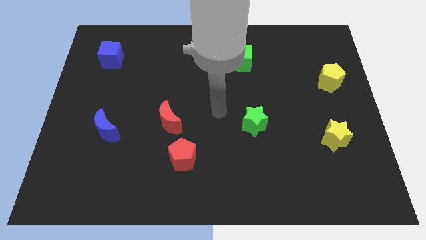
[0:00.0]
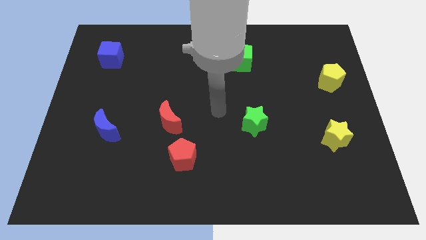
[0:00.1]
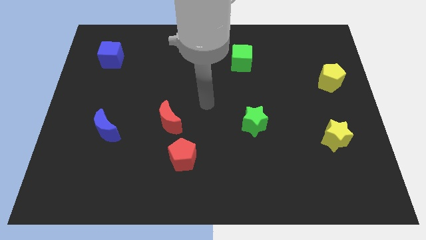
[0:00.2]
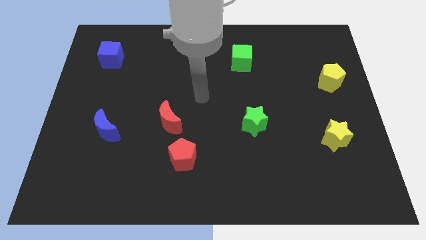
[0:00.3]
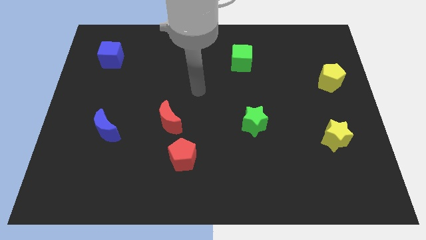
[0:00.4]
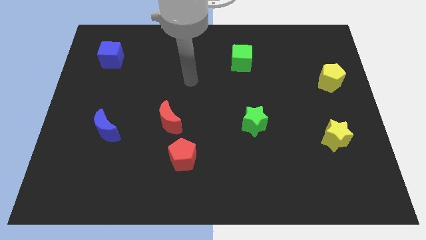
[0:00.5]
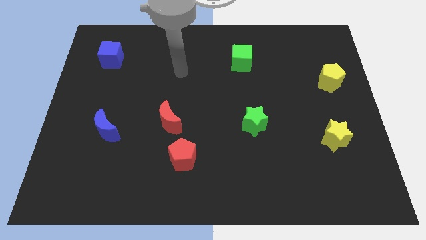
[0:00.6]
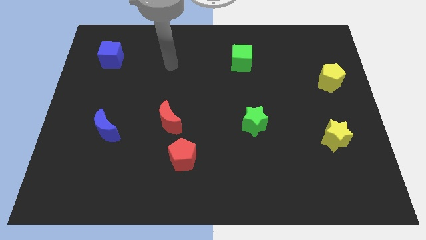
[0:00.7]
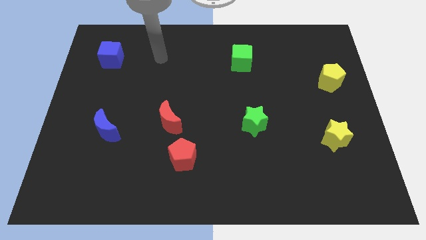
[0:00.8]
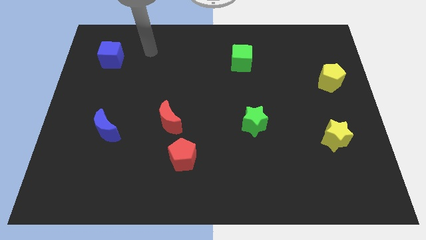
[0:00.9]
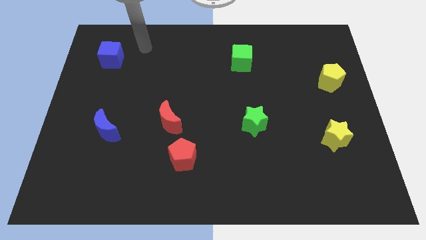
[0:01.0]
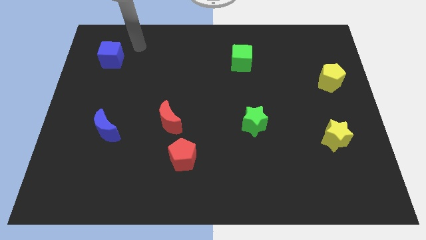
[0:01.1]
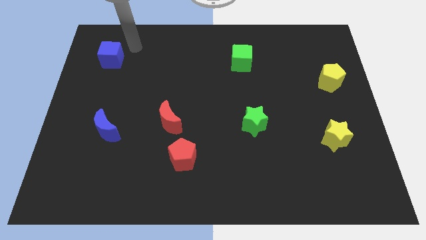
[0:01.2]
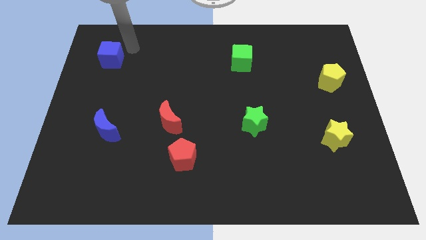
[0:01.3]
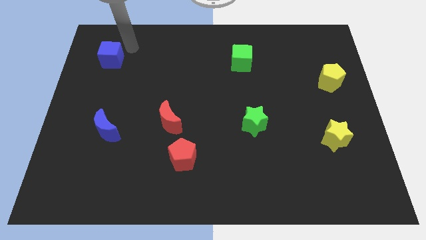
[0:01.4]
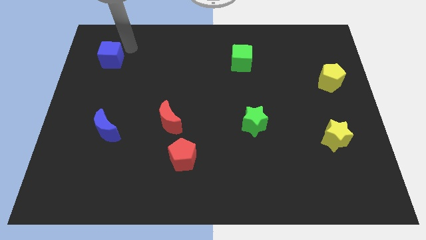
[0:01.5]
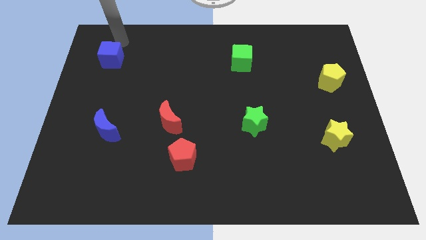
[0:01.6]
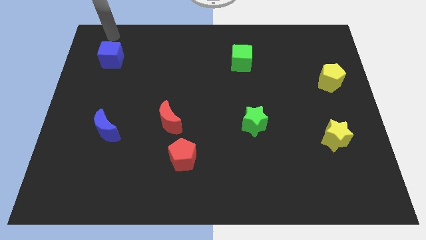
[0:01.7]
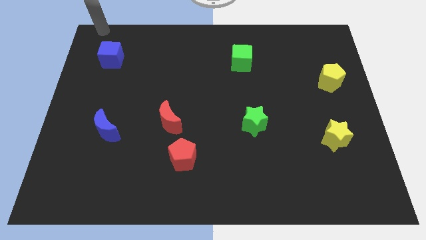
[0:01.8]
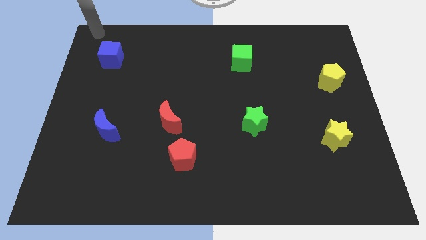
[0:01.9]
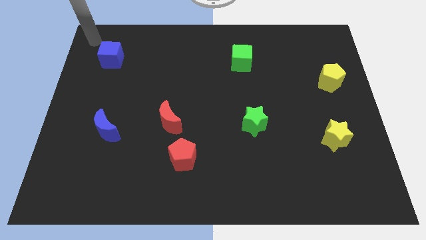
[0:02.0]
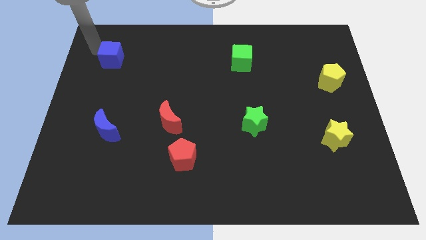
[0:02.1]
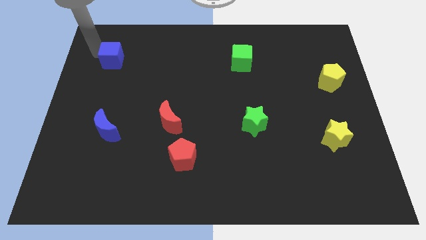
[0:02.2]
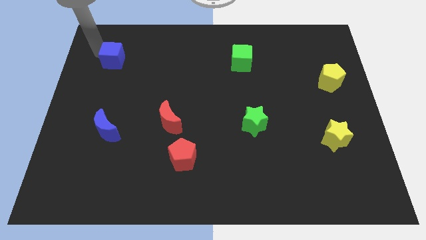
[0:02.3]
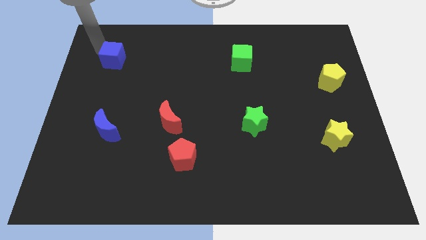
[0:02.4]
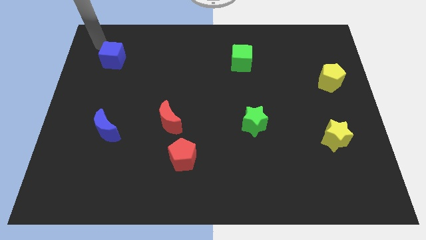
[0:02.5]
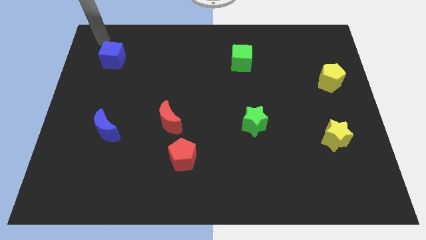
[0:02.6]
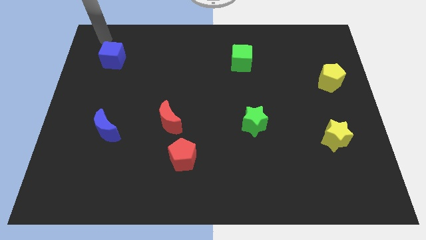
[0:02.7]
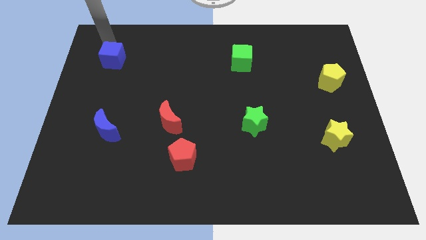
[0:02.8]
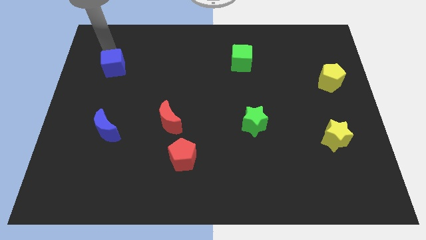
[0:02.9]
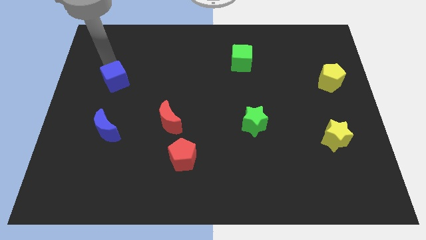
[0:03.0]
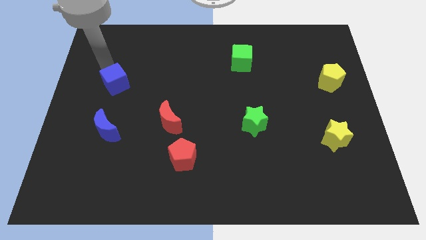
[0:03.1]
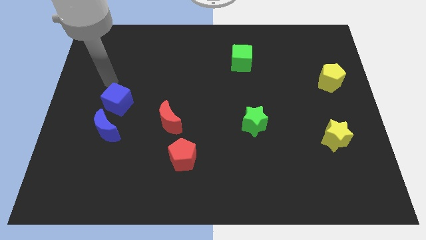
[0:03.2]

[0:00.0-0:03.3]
place the blue cube to the top side of the blue moon

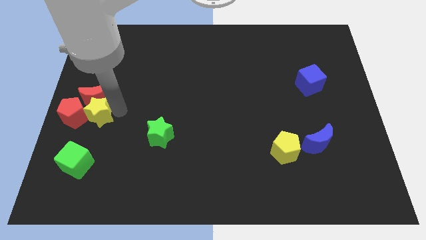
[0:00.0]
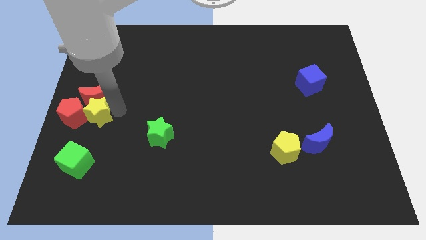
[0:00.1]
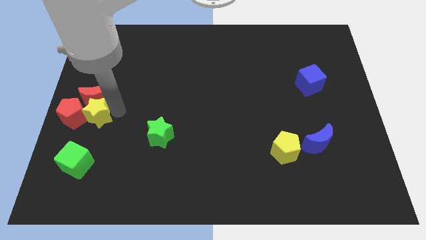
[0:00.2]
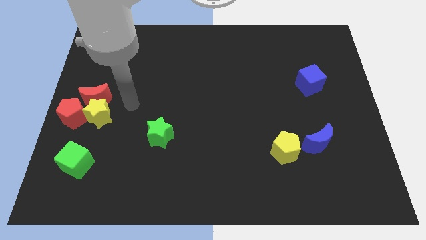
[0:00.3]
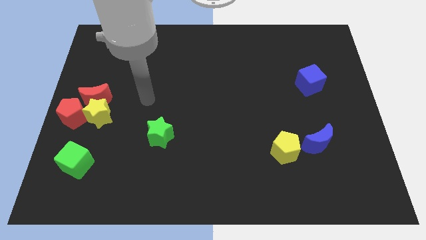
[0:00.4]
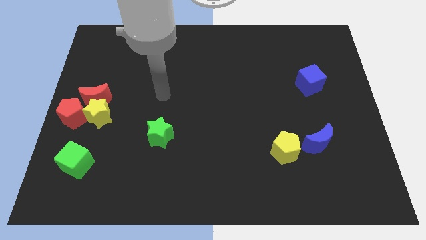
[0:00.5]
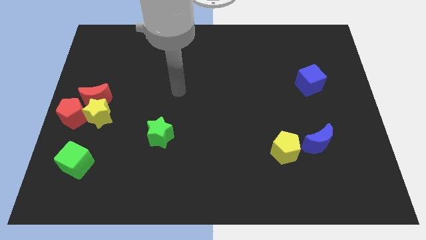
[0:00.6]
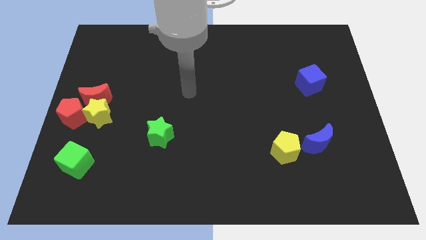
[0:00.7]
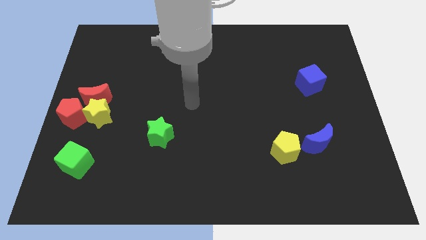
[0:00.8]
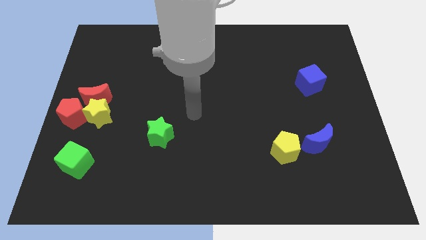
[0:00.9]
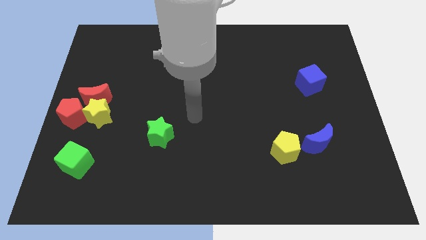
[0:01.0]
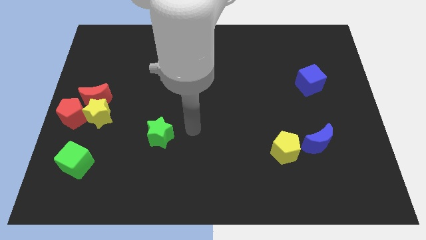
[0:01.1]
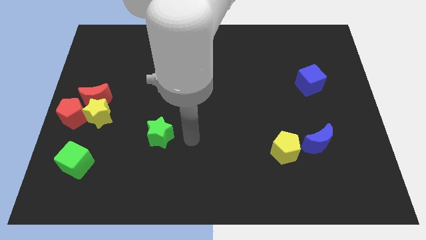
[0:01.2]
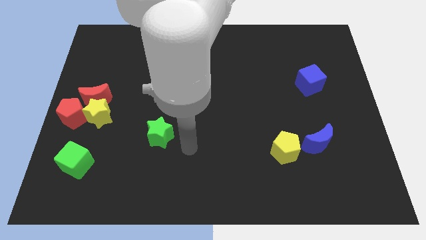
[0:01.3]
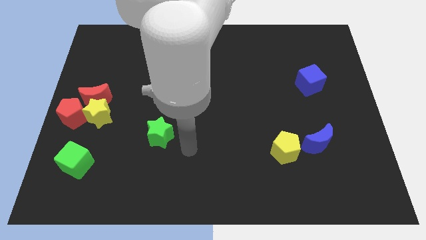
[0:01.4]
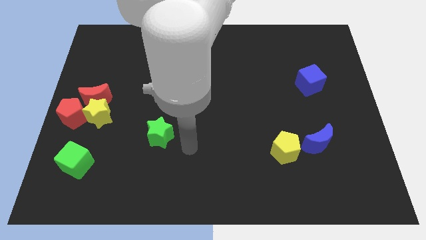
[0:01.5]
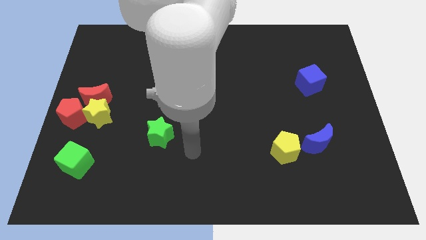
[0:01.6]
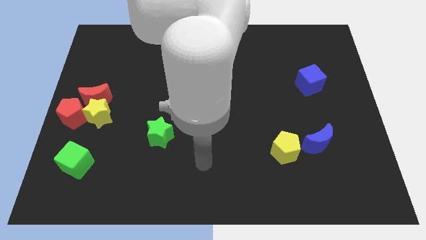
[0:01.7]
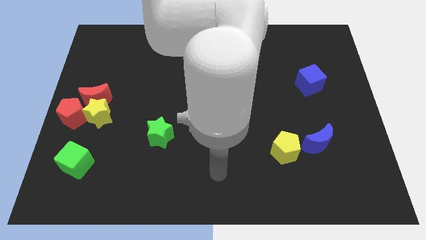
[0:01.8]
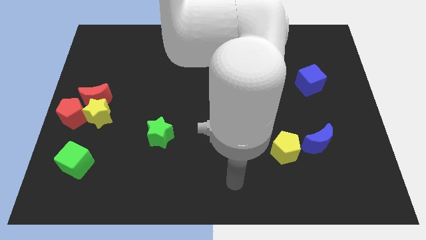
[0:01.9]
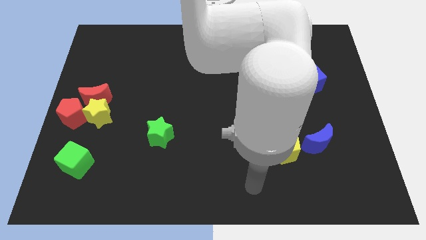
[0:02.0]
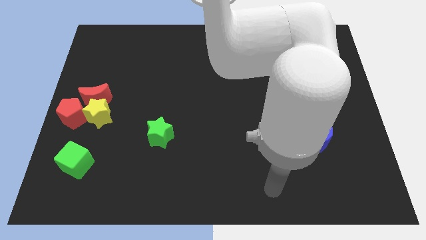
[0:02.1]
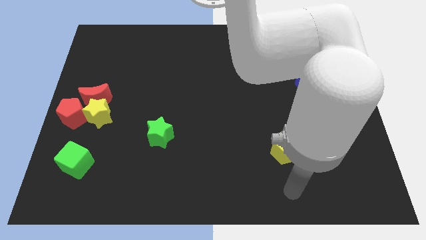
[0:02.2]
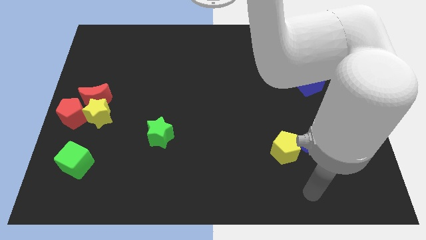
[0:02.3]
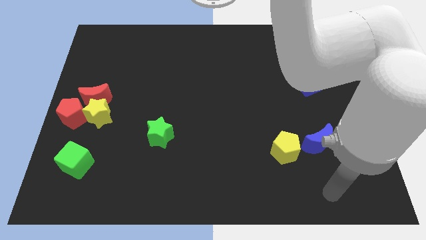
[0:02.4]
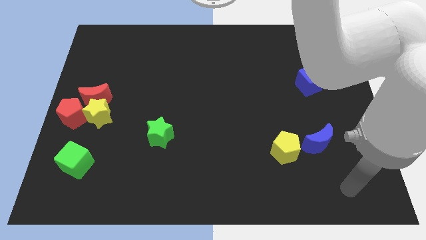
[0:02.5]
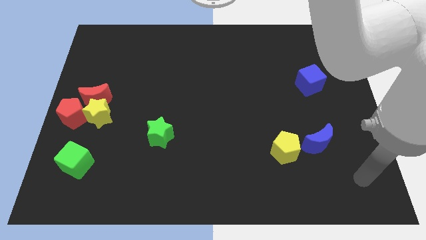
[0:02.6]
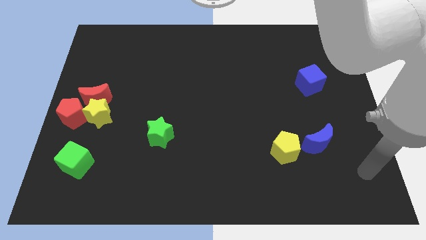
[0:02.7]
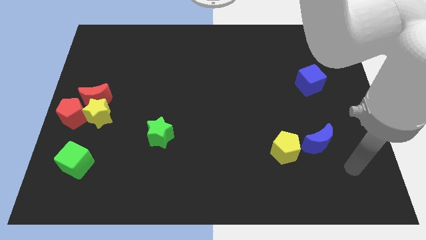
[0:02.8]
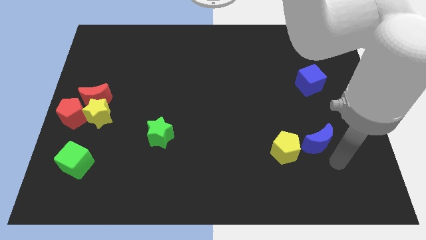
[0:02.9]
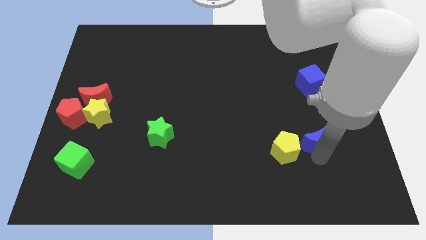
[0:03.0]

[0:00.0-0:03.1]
go away from the yellow star

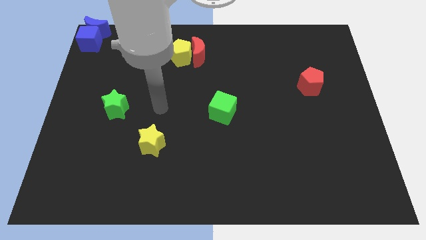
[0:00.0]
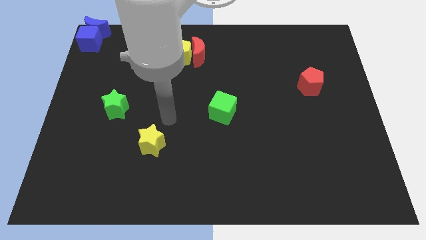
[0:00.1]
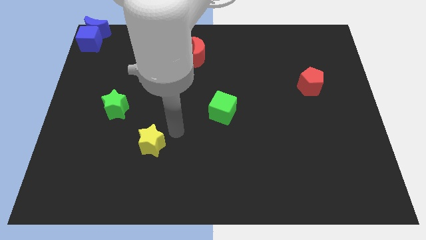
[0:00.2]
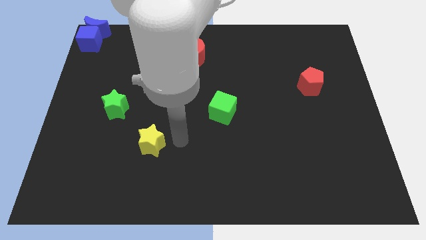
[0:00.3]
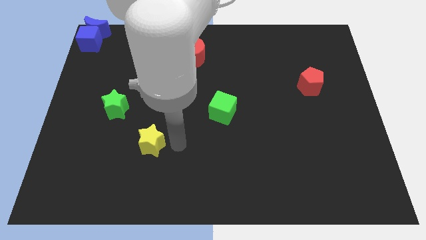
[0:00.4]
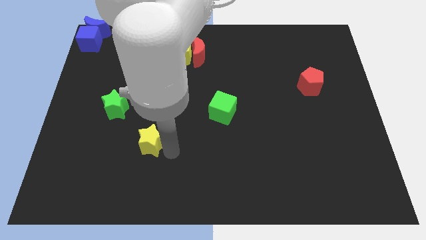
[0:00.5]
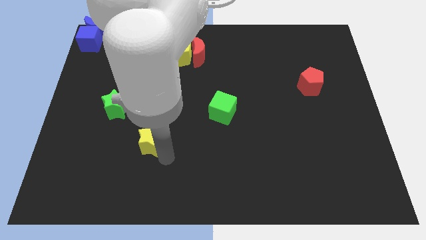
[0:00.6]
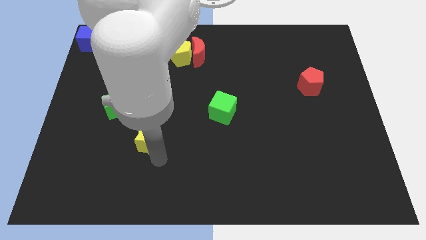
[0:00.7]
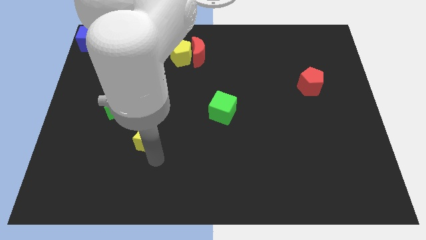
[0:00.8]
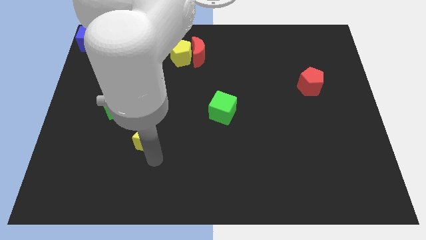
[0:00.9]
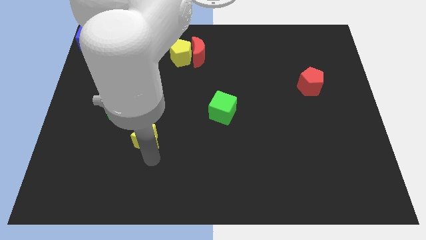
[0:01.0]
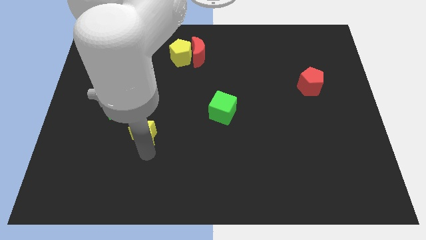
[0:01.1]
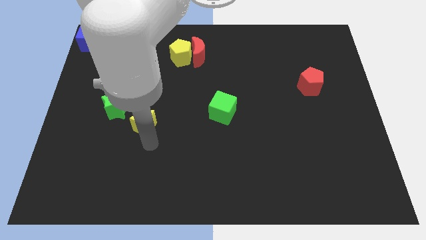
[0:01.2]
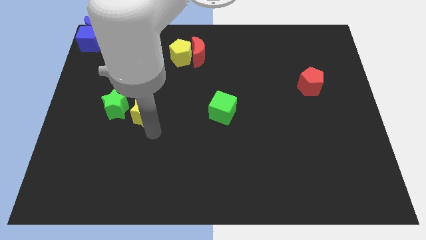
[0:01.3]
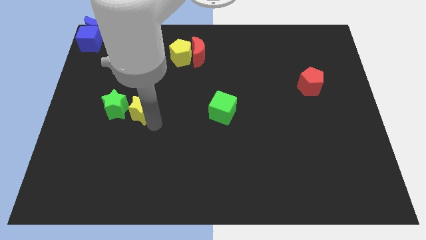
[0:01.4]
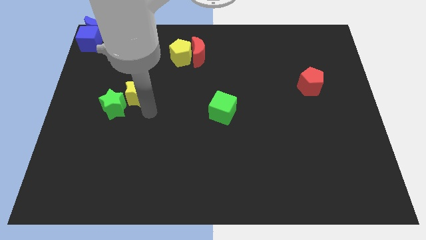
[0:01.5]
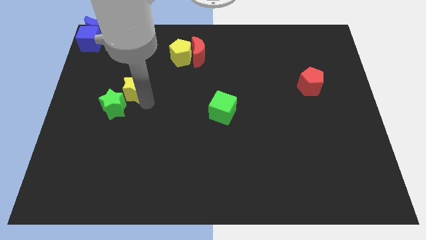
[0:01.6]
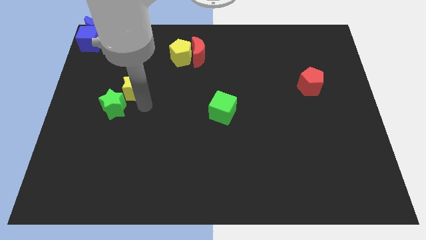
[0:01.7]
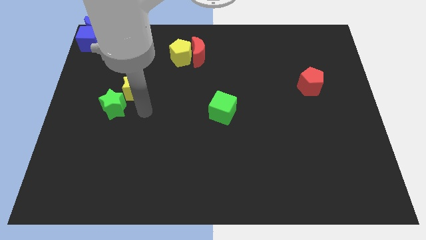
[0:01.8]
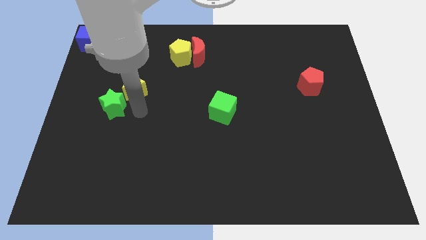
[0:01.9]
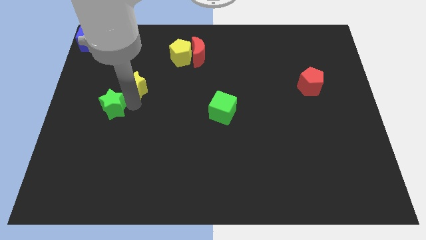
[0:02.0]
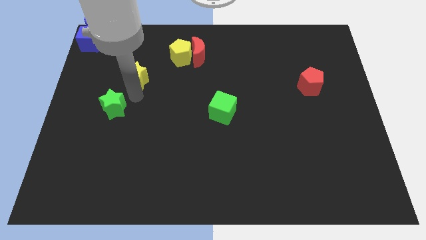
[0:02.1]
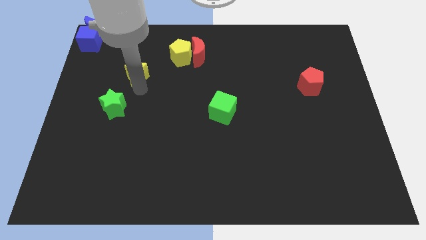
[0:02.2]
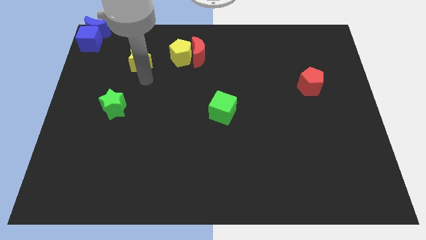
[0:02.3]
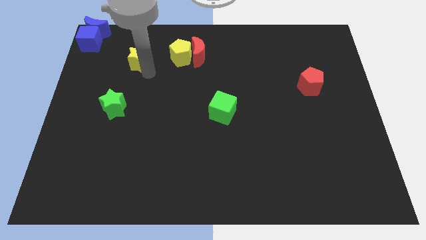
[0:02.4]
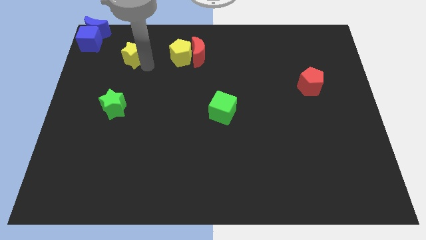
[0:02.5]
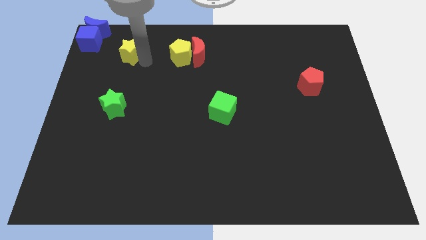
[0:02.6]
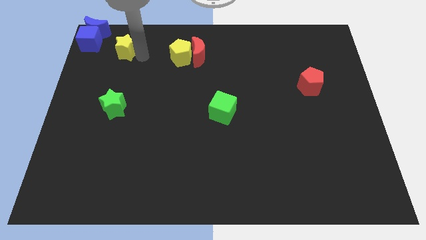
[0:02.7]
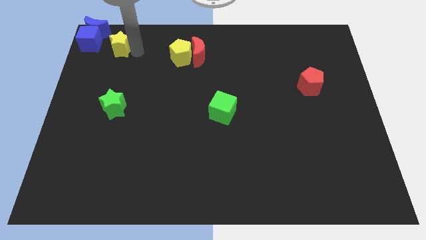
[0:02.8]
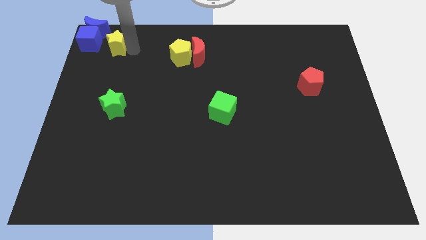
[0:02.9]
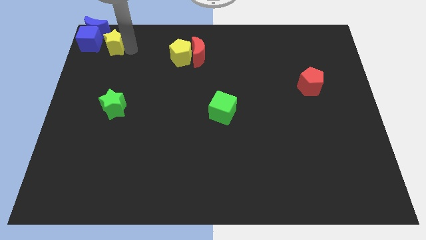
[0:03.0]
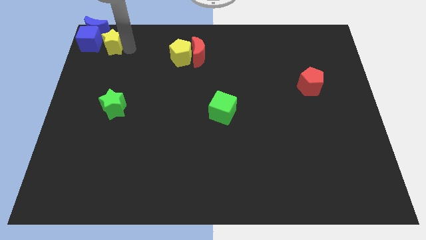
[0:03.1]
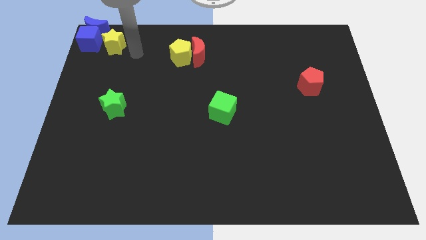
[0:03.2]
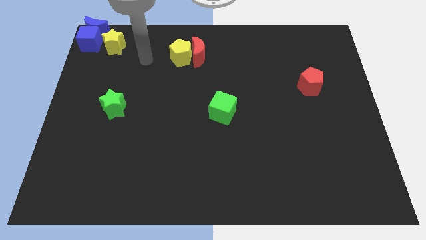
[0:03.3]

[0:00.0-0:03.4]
move the yellow star to the right of the blue cube
